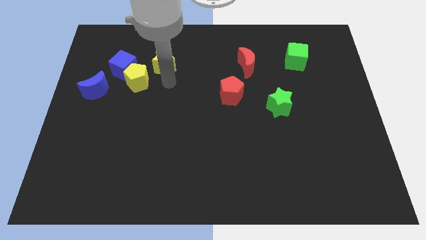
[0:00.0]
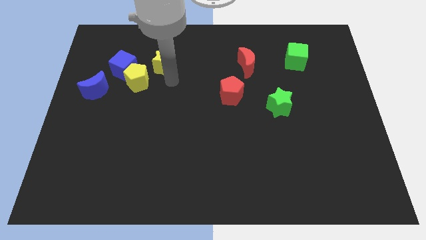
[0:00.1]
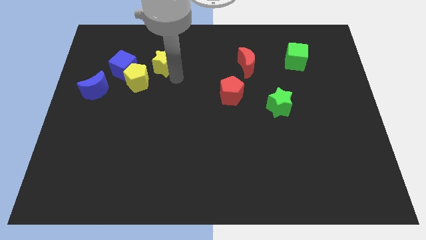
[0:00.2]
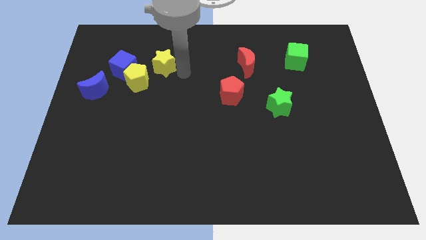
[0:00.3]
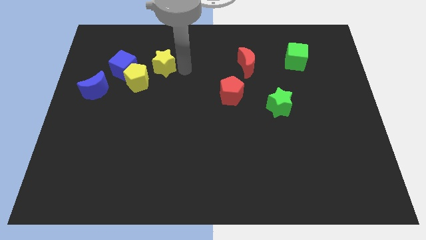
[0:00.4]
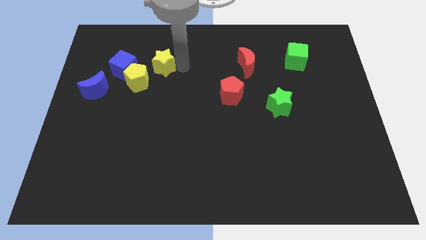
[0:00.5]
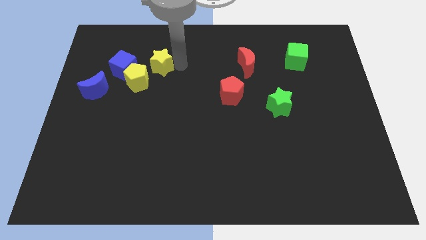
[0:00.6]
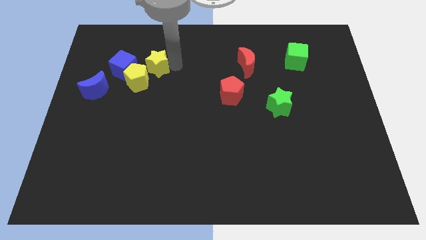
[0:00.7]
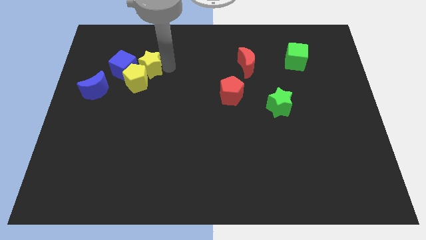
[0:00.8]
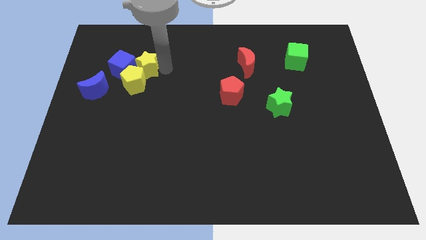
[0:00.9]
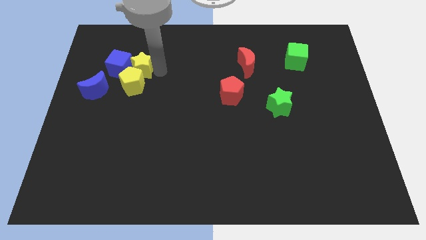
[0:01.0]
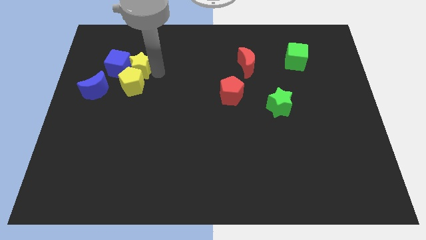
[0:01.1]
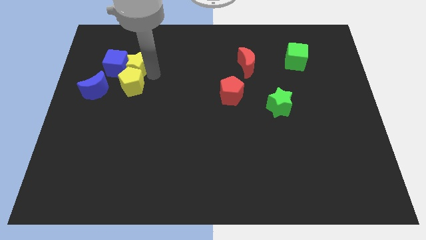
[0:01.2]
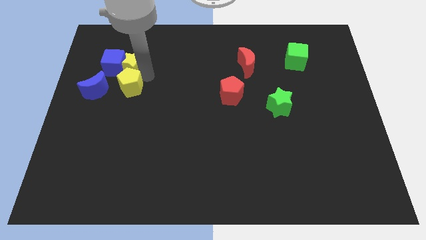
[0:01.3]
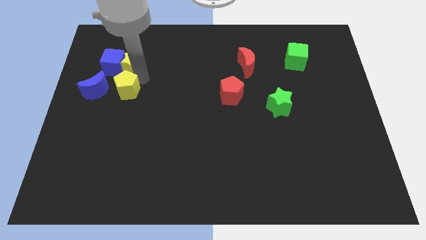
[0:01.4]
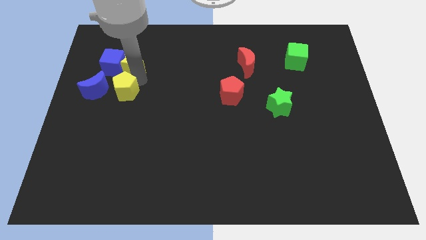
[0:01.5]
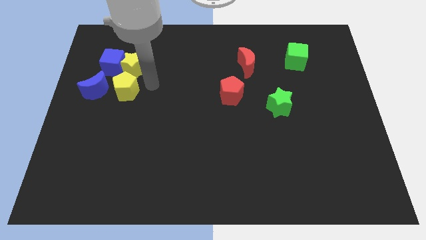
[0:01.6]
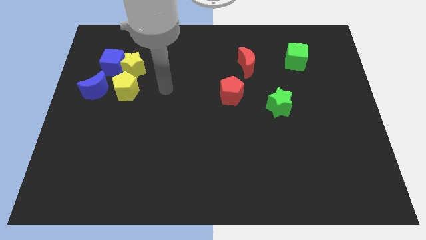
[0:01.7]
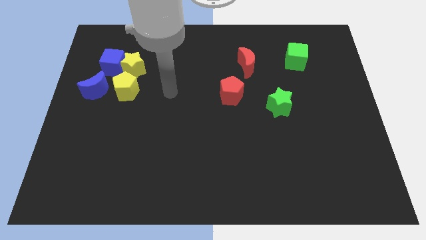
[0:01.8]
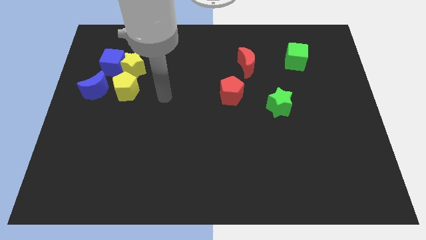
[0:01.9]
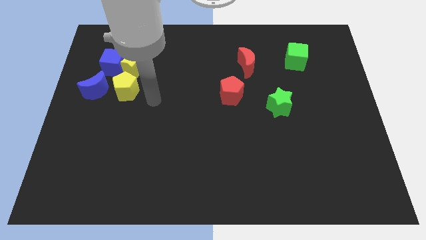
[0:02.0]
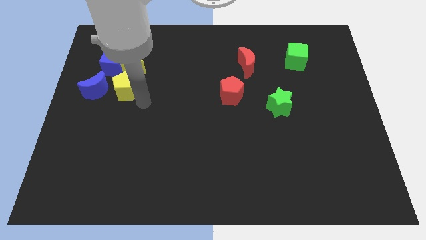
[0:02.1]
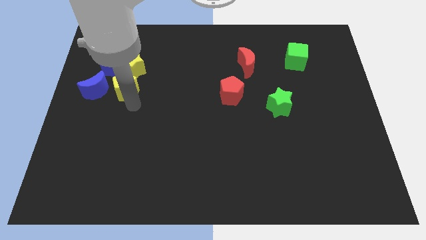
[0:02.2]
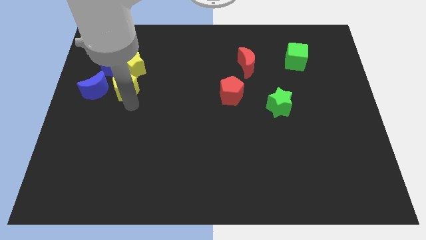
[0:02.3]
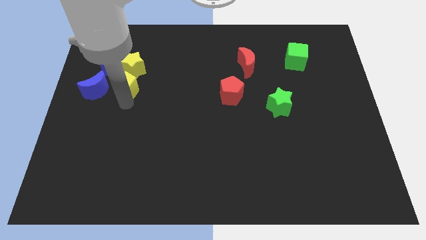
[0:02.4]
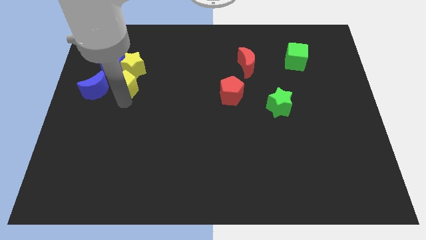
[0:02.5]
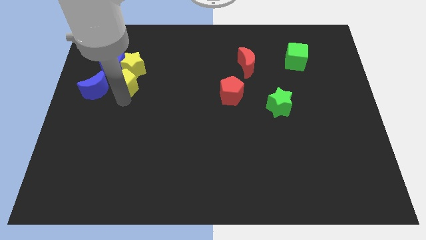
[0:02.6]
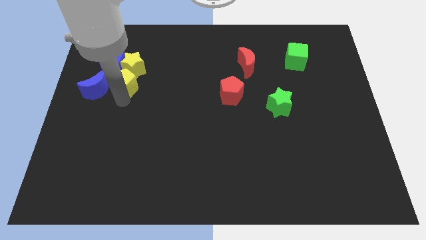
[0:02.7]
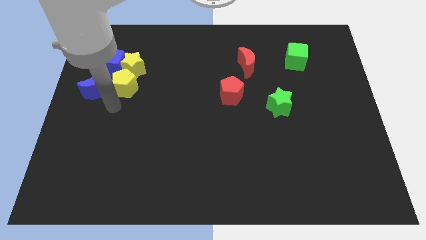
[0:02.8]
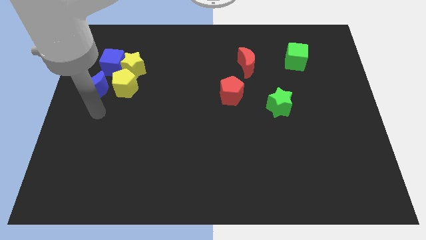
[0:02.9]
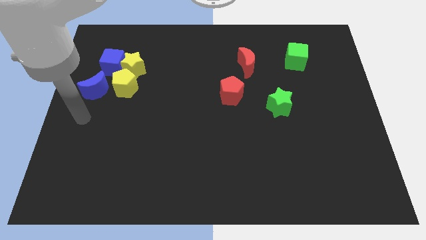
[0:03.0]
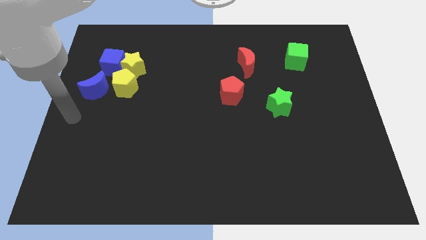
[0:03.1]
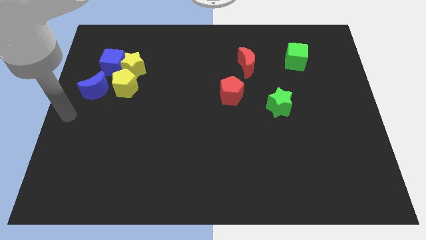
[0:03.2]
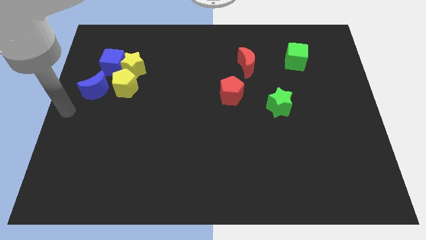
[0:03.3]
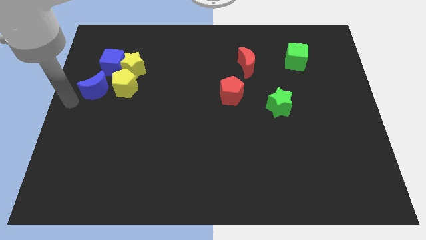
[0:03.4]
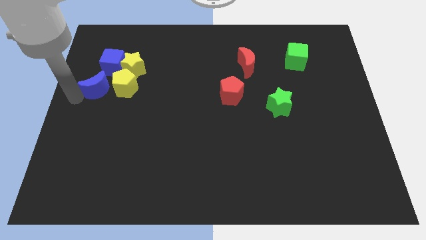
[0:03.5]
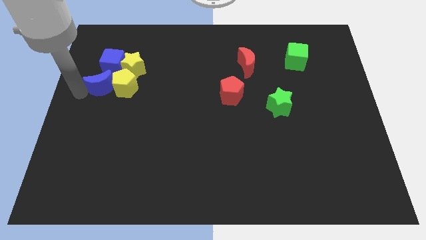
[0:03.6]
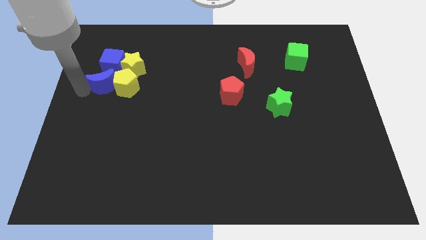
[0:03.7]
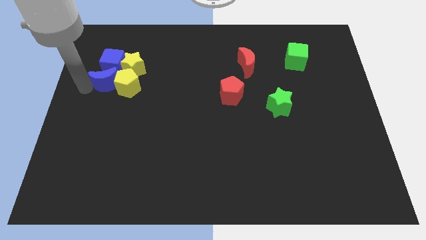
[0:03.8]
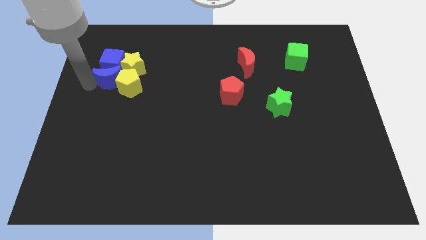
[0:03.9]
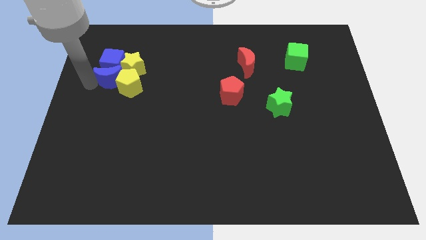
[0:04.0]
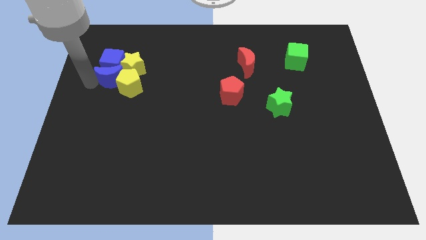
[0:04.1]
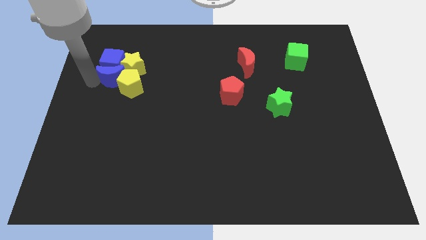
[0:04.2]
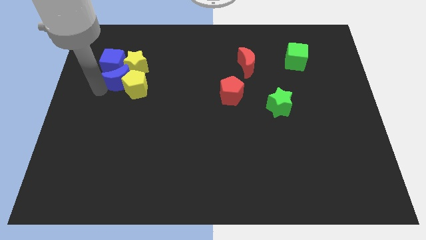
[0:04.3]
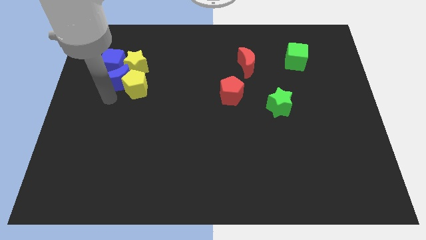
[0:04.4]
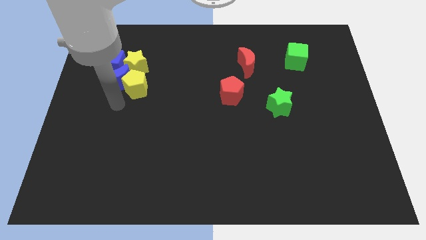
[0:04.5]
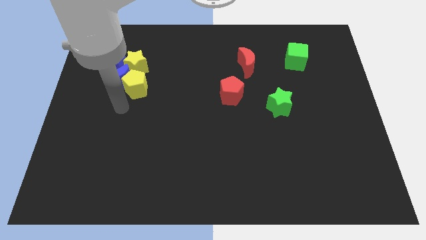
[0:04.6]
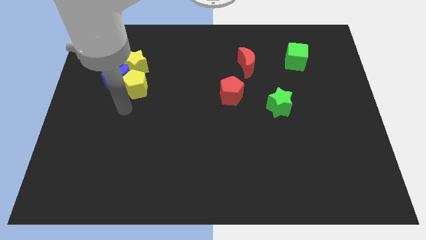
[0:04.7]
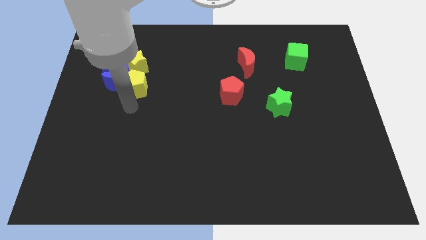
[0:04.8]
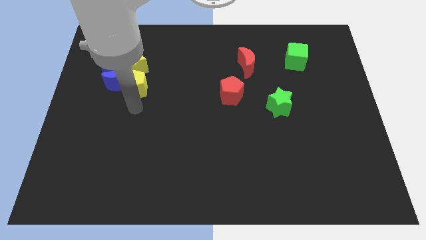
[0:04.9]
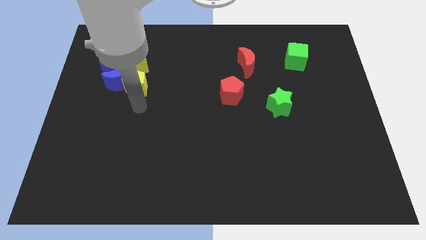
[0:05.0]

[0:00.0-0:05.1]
adjust the yellow and blue blocks at the top left of the board

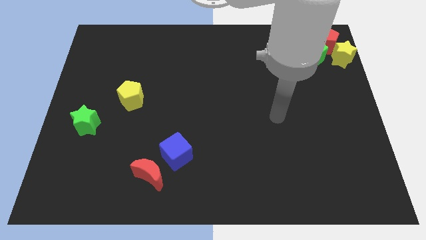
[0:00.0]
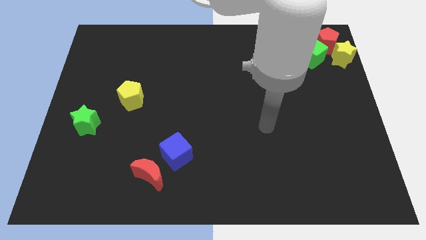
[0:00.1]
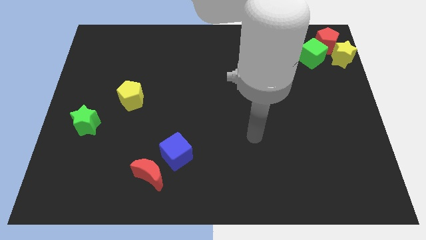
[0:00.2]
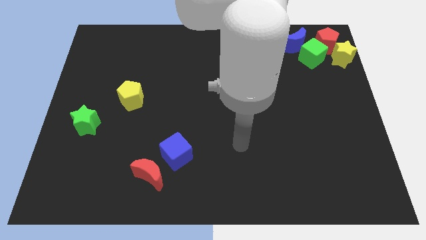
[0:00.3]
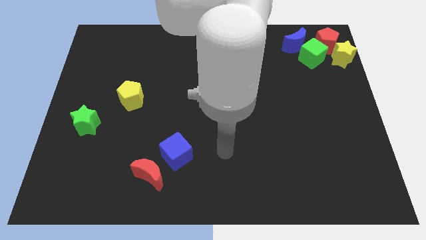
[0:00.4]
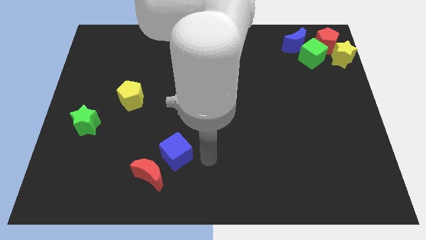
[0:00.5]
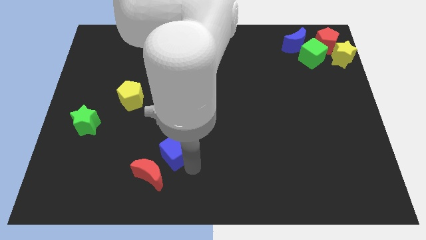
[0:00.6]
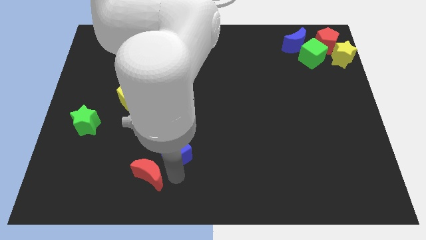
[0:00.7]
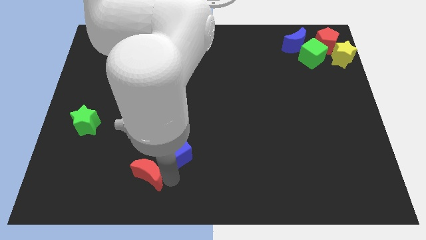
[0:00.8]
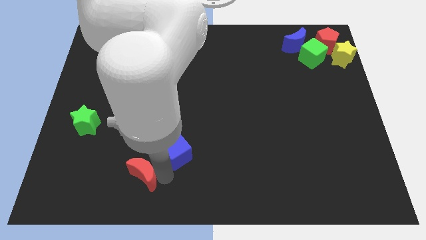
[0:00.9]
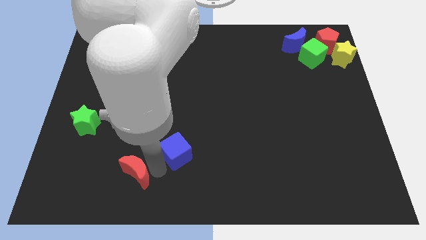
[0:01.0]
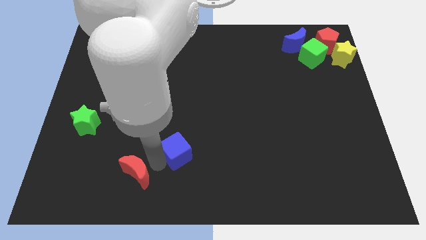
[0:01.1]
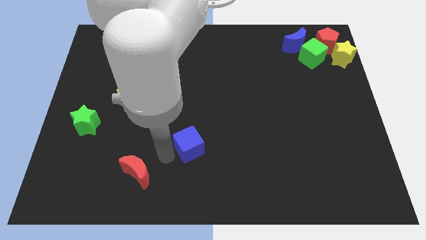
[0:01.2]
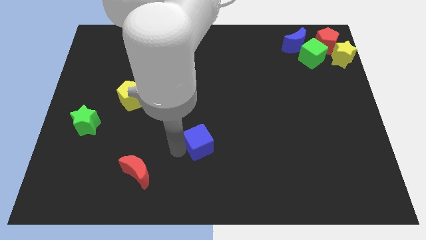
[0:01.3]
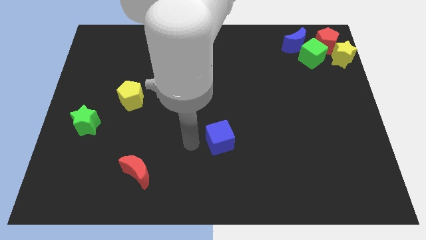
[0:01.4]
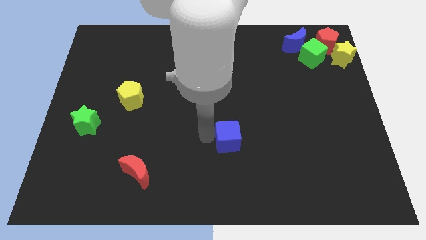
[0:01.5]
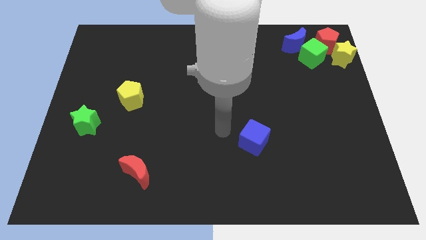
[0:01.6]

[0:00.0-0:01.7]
separate the blue cube from red crescent

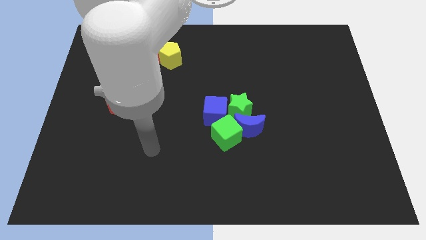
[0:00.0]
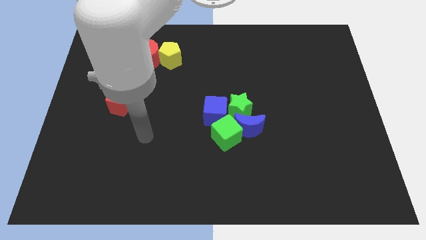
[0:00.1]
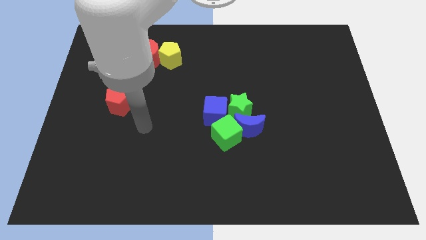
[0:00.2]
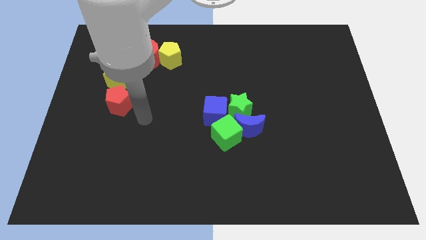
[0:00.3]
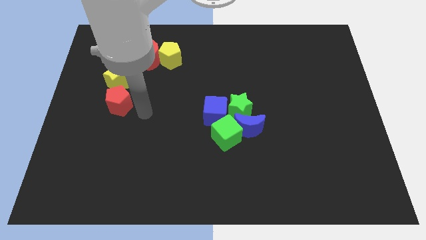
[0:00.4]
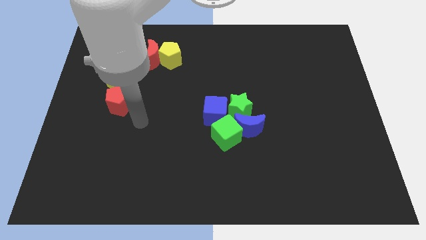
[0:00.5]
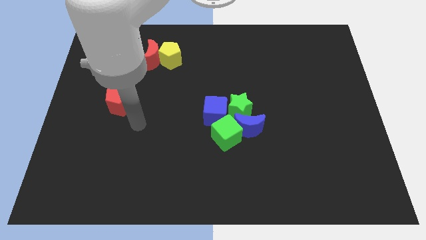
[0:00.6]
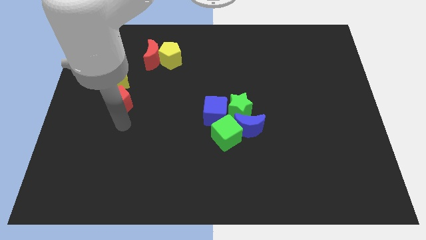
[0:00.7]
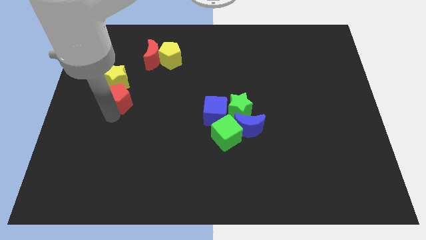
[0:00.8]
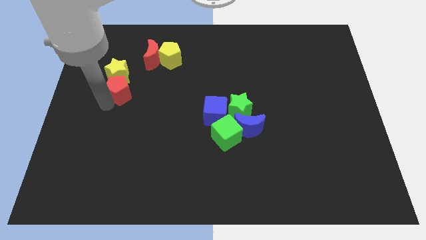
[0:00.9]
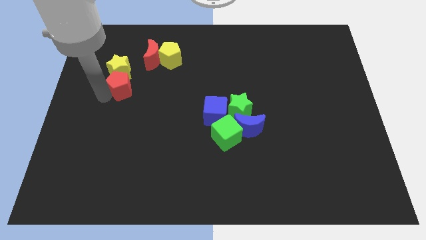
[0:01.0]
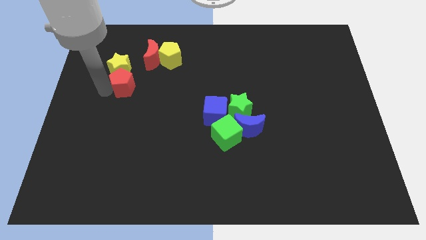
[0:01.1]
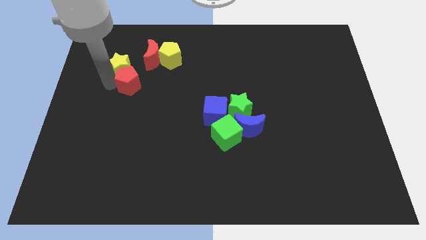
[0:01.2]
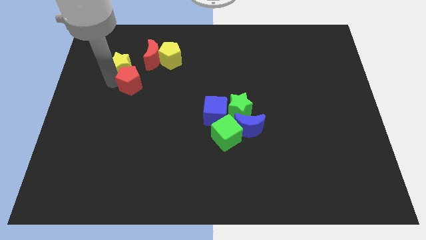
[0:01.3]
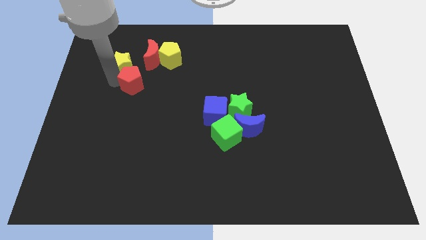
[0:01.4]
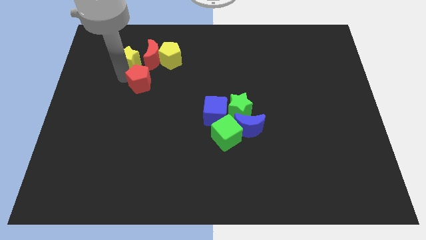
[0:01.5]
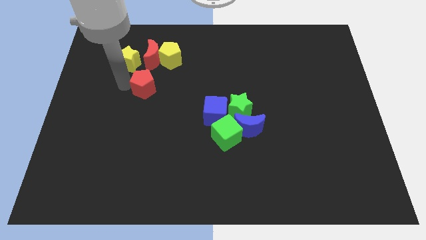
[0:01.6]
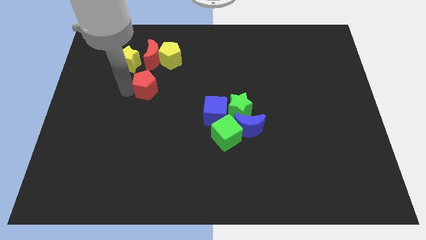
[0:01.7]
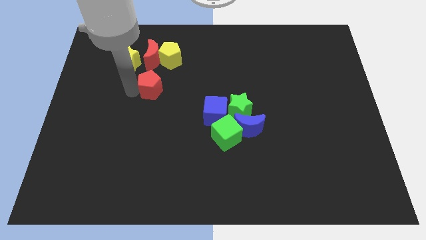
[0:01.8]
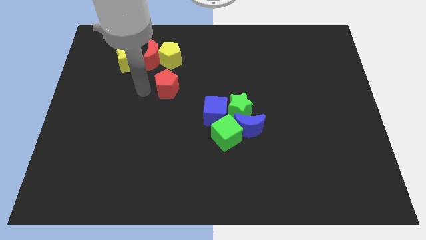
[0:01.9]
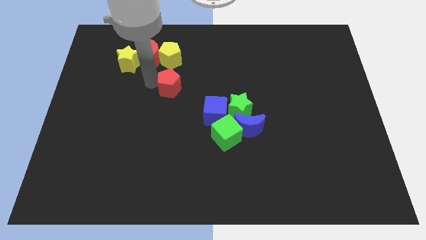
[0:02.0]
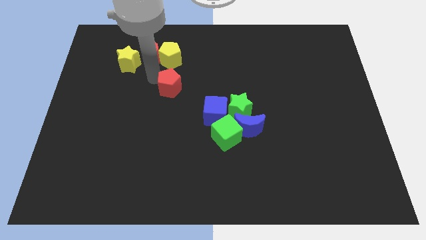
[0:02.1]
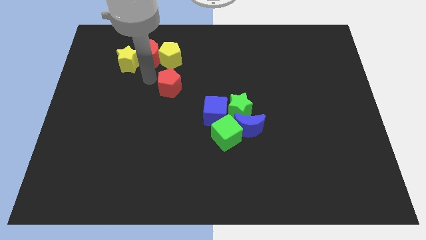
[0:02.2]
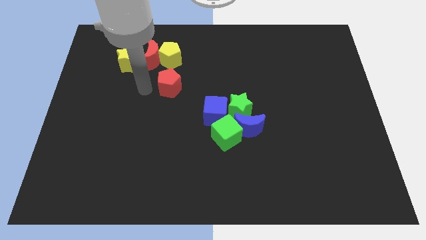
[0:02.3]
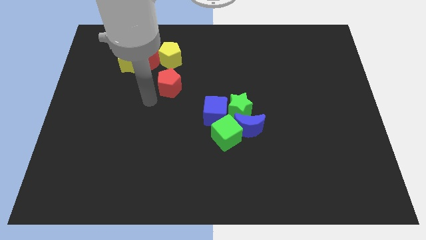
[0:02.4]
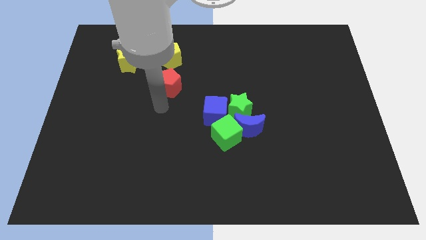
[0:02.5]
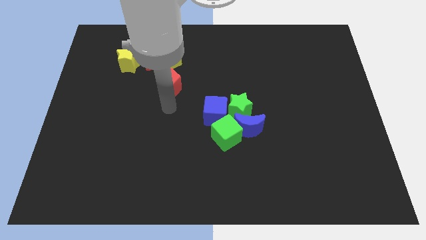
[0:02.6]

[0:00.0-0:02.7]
place red pentagon below yellow pentagon
